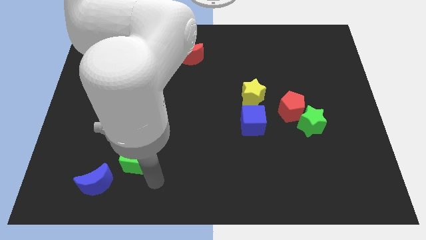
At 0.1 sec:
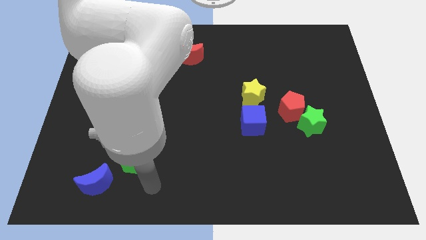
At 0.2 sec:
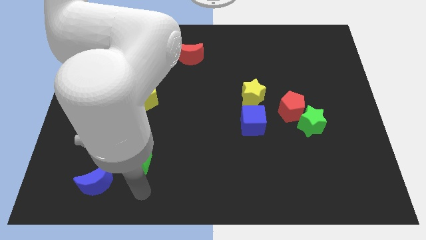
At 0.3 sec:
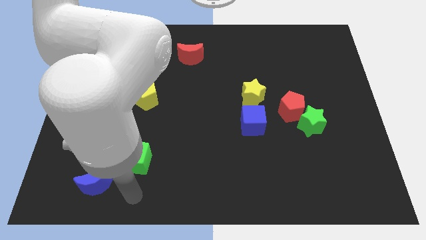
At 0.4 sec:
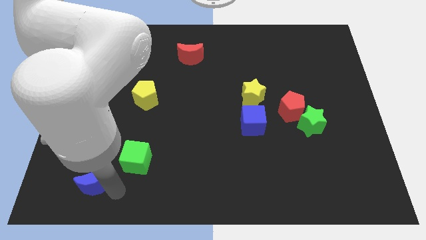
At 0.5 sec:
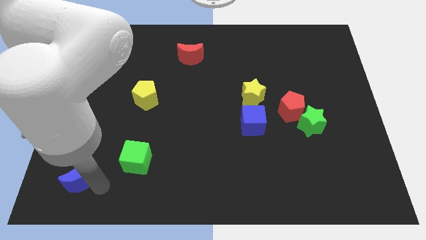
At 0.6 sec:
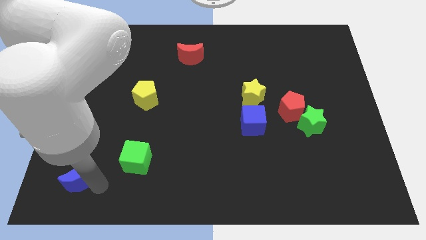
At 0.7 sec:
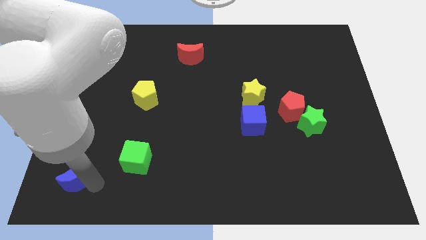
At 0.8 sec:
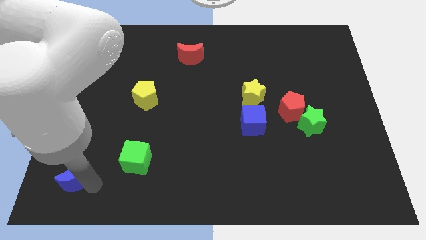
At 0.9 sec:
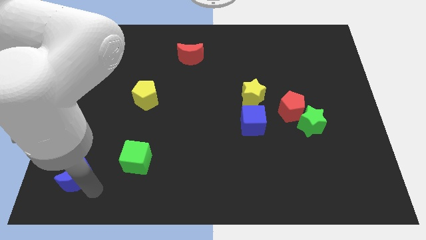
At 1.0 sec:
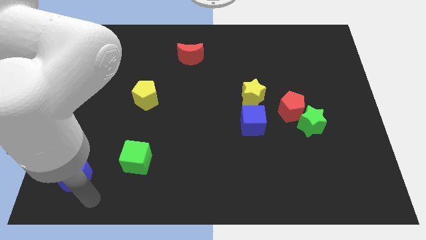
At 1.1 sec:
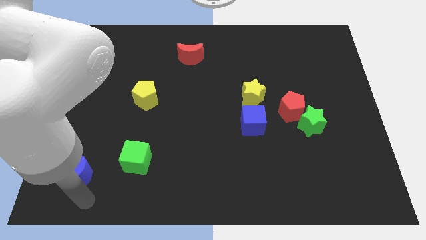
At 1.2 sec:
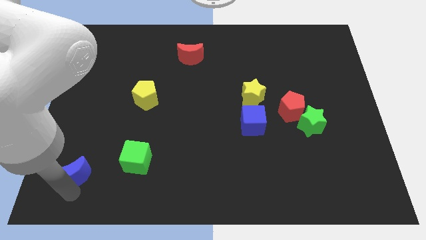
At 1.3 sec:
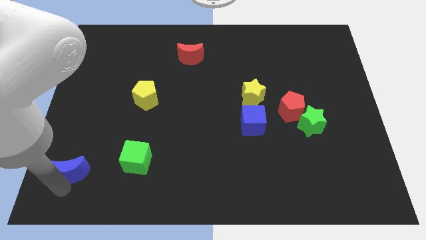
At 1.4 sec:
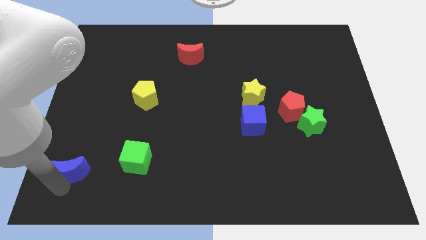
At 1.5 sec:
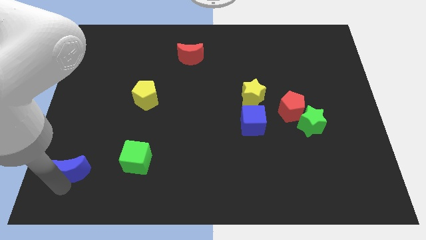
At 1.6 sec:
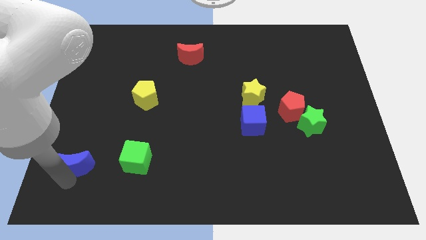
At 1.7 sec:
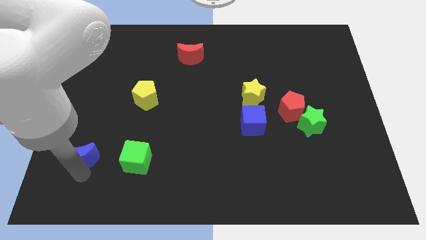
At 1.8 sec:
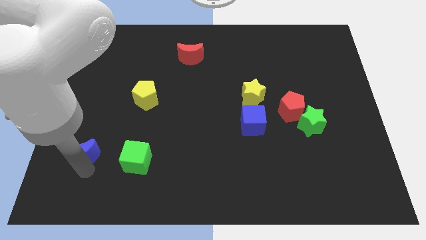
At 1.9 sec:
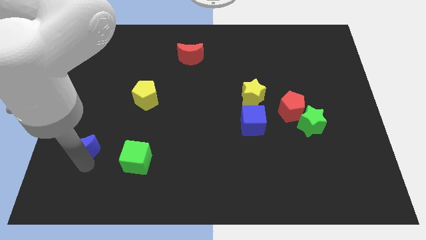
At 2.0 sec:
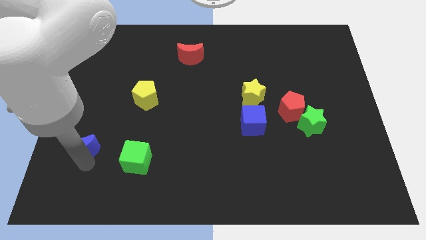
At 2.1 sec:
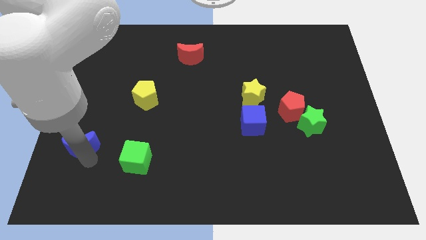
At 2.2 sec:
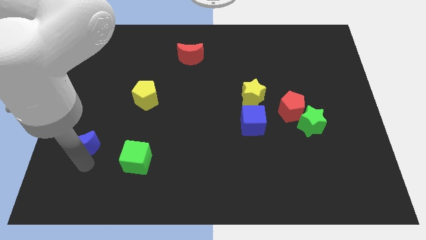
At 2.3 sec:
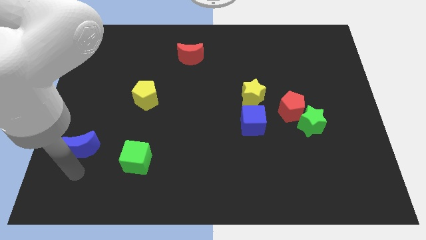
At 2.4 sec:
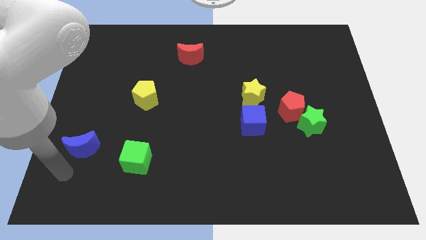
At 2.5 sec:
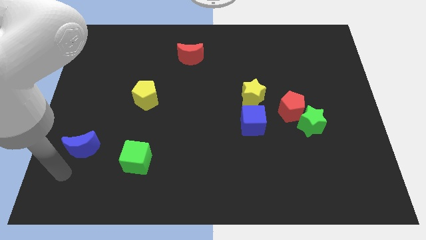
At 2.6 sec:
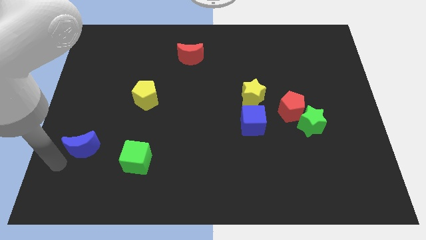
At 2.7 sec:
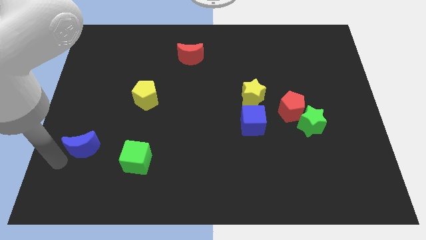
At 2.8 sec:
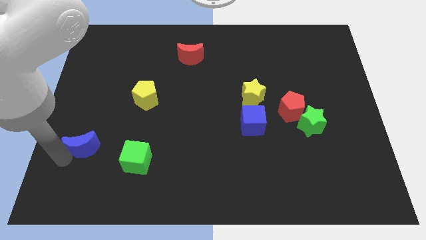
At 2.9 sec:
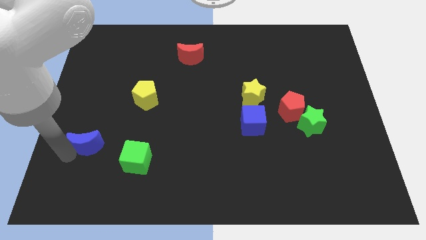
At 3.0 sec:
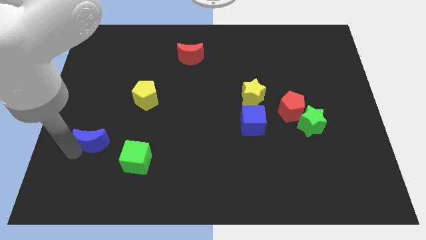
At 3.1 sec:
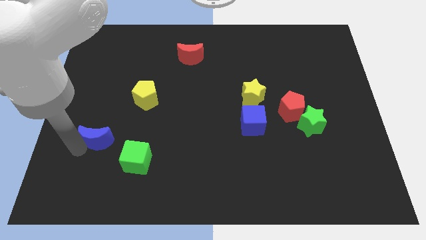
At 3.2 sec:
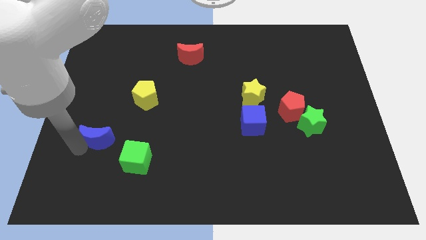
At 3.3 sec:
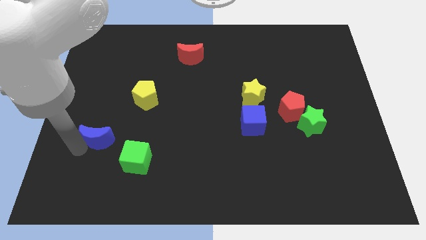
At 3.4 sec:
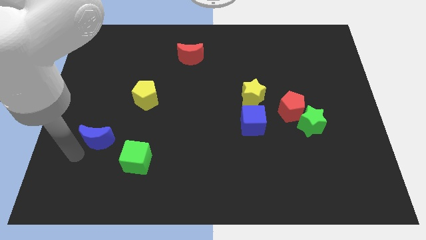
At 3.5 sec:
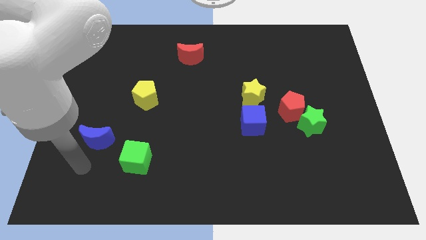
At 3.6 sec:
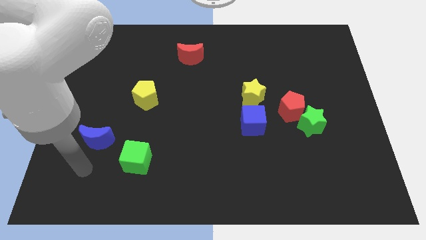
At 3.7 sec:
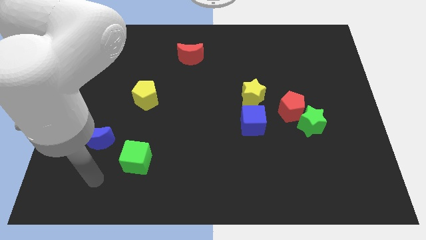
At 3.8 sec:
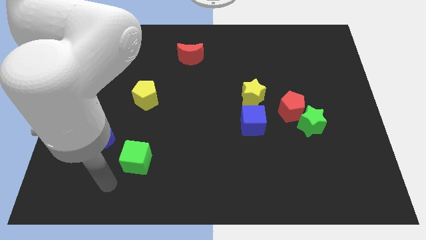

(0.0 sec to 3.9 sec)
push the blue cube to the top of the board

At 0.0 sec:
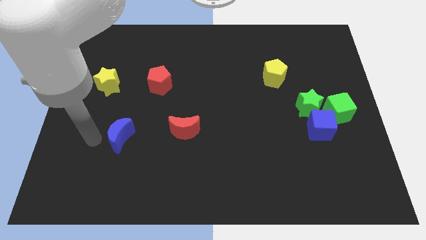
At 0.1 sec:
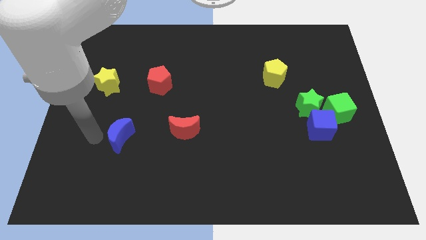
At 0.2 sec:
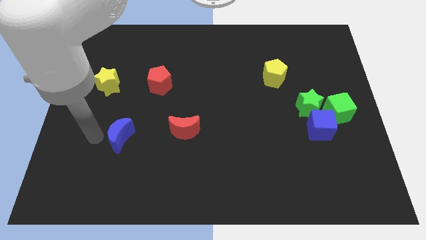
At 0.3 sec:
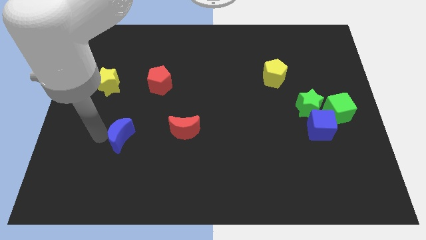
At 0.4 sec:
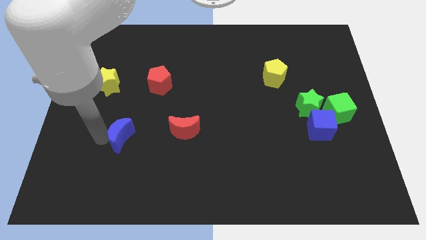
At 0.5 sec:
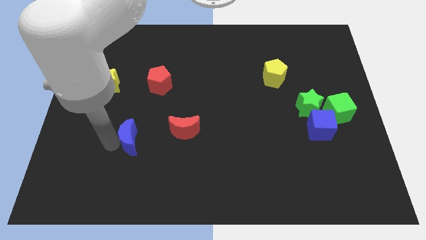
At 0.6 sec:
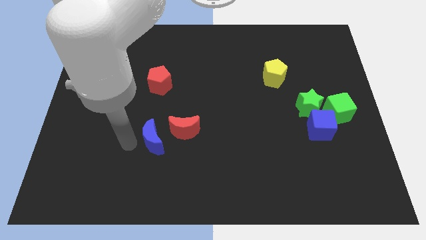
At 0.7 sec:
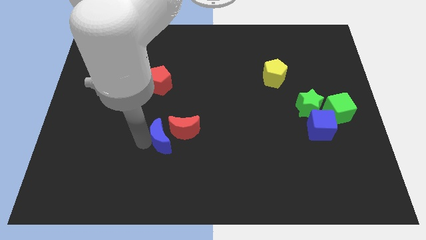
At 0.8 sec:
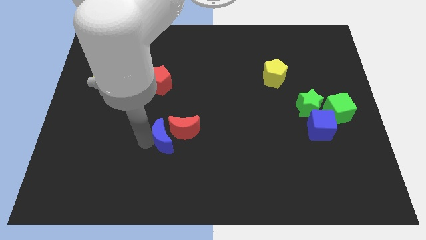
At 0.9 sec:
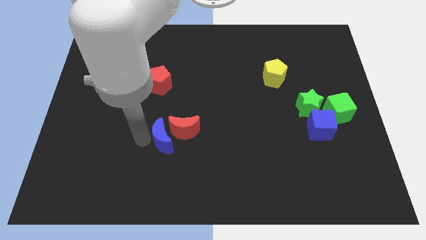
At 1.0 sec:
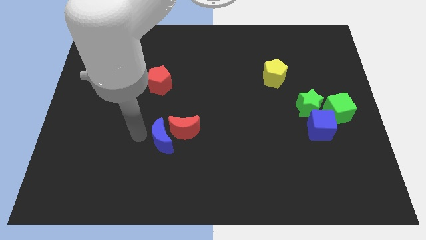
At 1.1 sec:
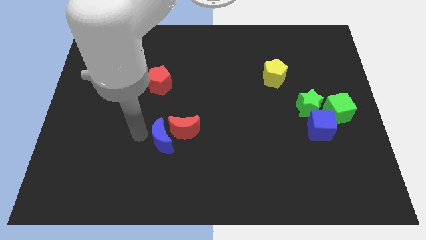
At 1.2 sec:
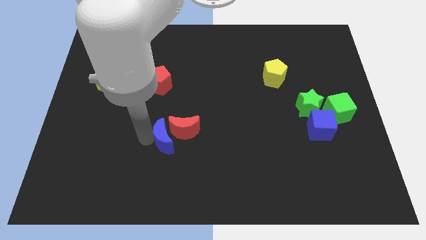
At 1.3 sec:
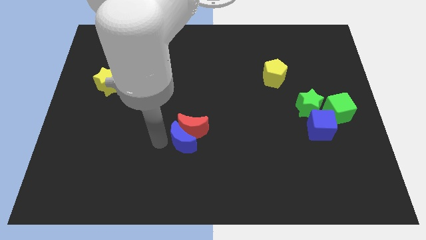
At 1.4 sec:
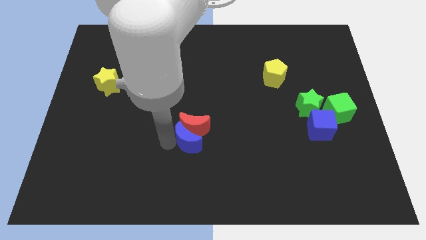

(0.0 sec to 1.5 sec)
move the blue moon into the red moon

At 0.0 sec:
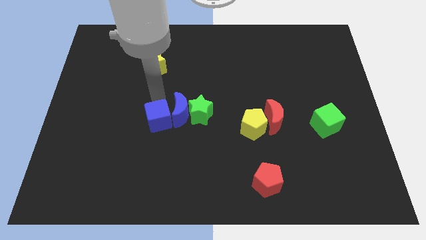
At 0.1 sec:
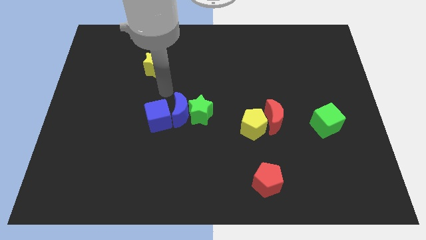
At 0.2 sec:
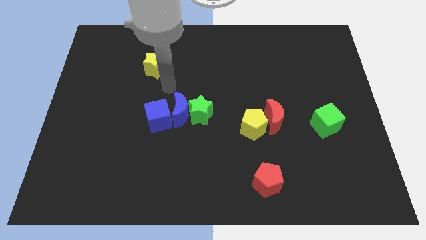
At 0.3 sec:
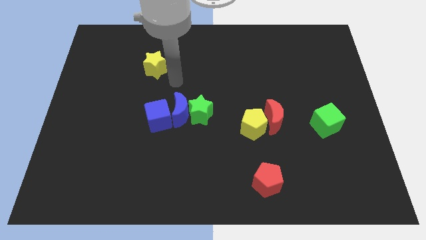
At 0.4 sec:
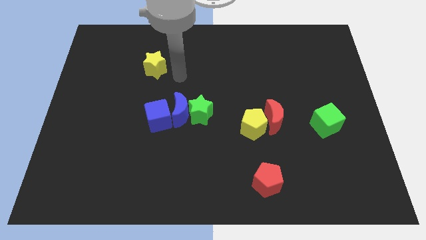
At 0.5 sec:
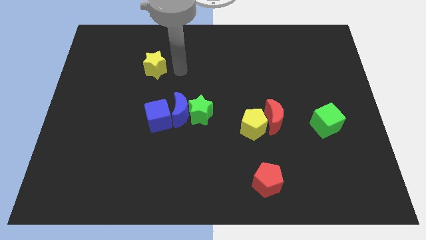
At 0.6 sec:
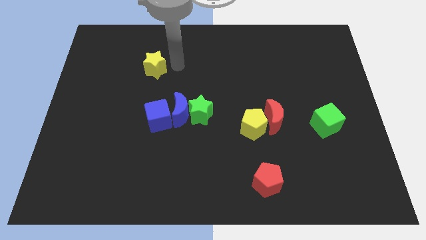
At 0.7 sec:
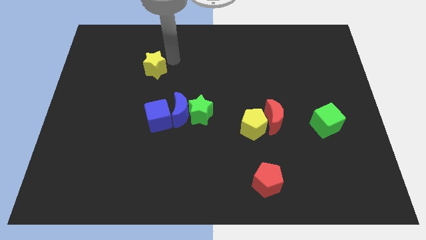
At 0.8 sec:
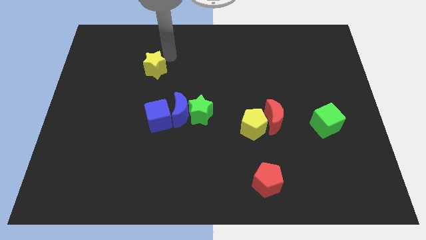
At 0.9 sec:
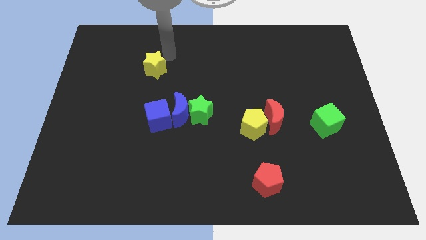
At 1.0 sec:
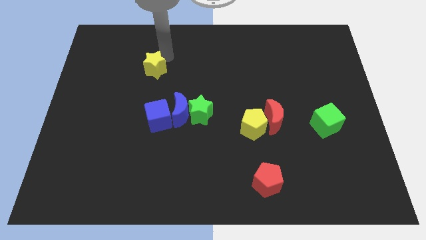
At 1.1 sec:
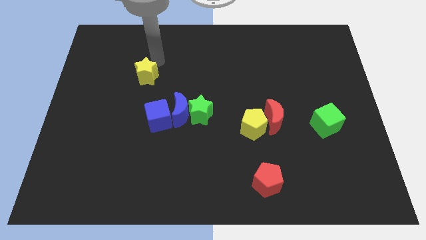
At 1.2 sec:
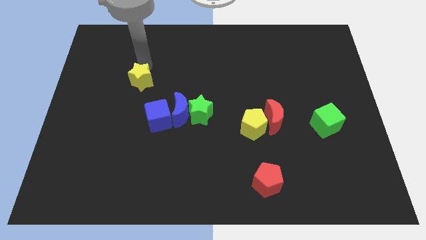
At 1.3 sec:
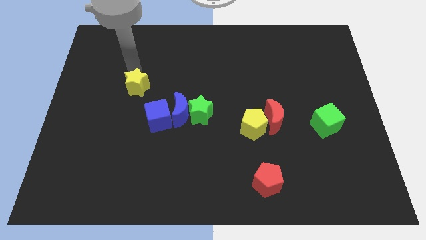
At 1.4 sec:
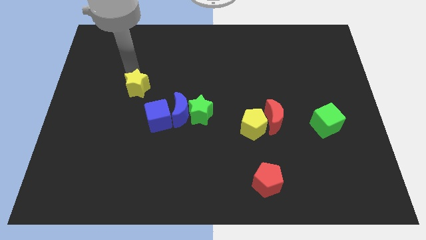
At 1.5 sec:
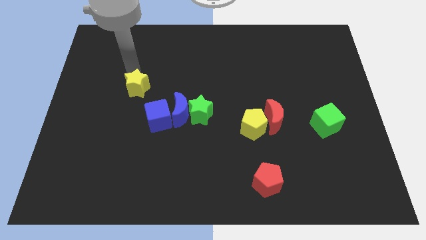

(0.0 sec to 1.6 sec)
move your arm away from the blue cube

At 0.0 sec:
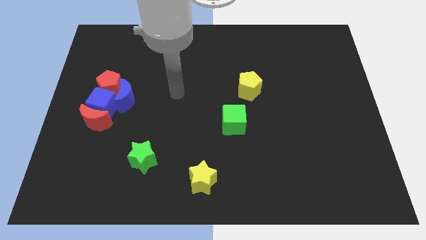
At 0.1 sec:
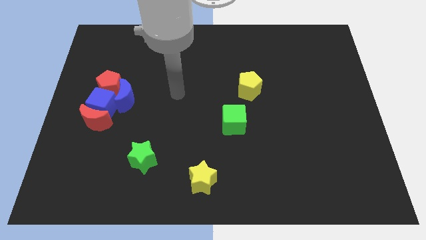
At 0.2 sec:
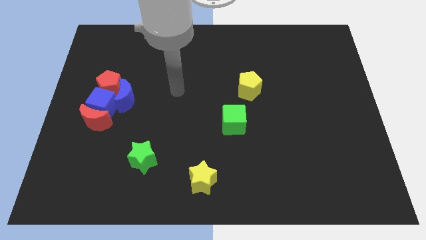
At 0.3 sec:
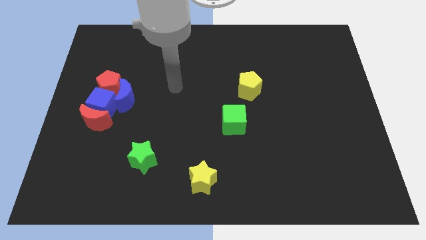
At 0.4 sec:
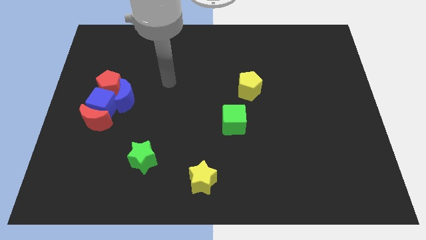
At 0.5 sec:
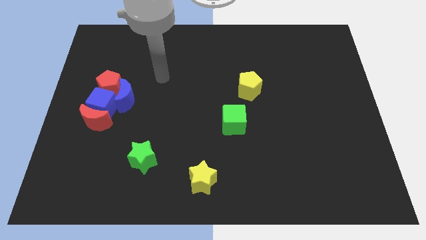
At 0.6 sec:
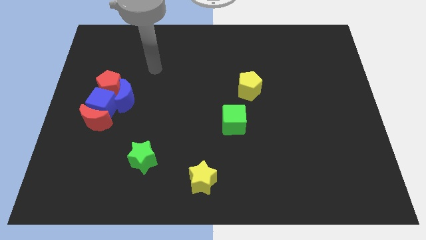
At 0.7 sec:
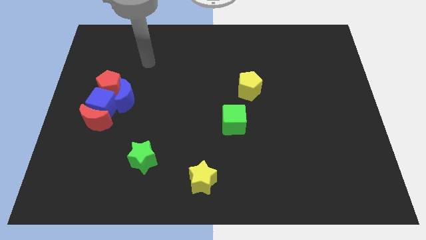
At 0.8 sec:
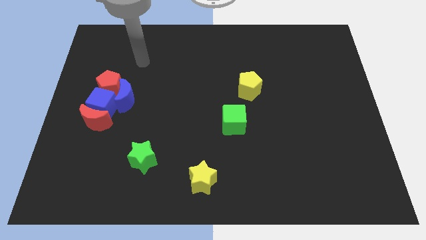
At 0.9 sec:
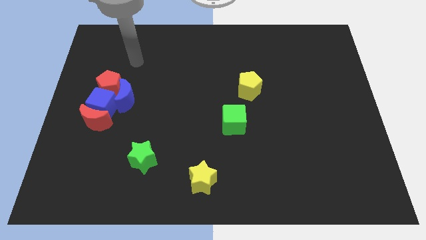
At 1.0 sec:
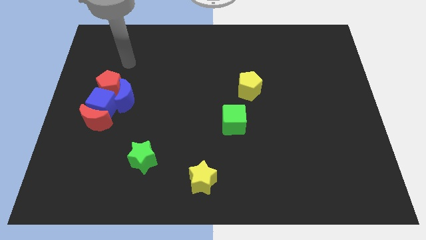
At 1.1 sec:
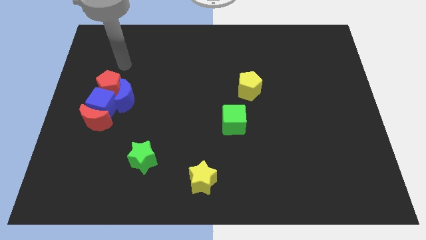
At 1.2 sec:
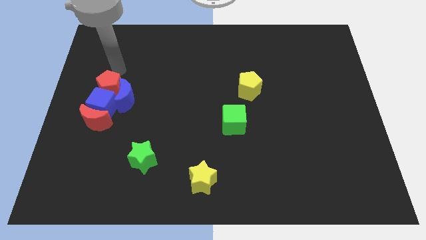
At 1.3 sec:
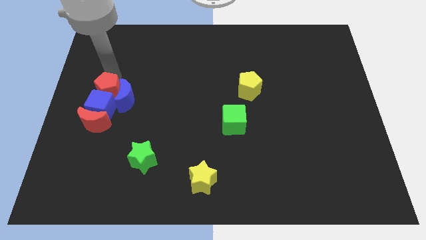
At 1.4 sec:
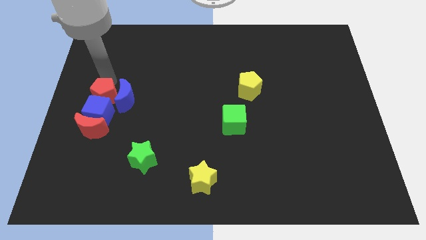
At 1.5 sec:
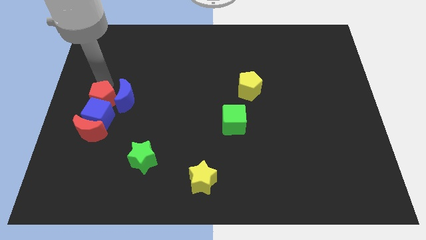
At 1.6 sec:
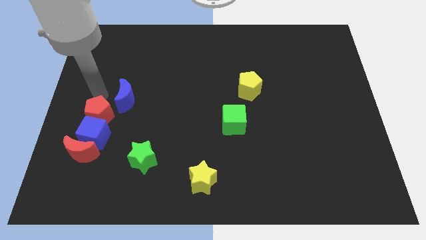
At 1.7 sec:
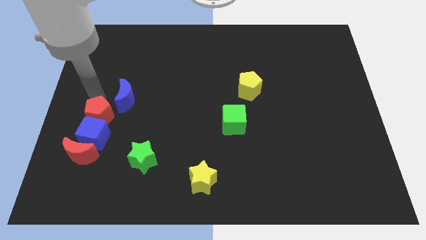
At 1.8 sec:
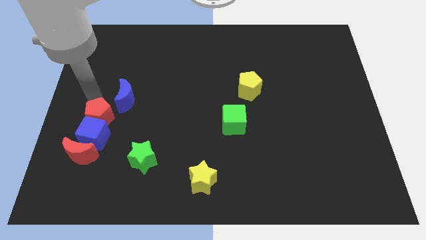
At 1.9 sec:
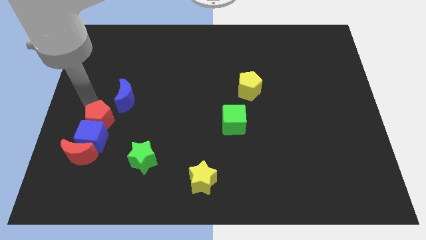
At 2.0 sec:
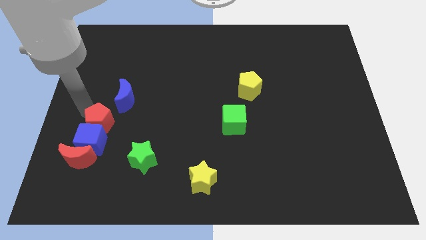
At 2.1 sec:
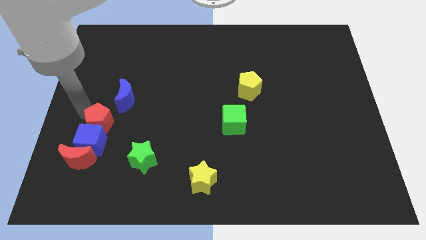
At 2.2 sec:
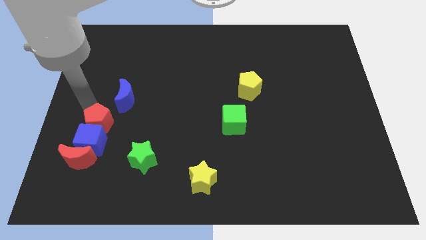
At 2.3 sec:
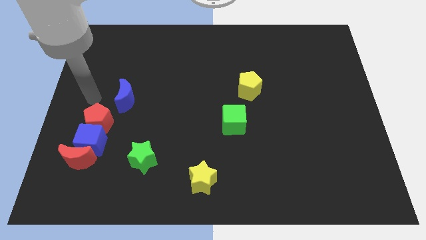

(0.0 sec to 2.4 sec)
separate the blue moon from group of blocks
